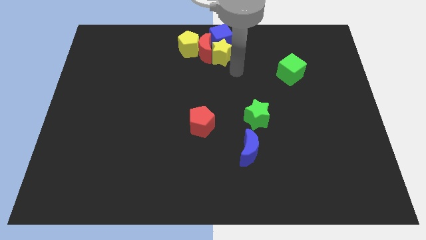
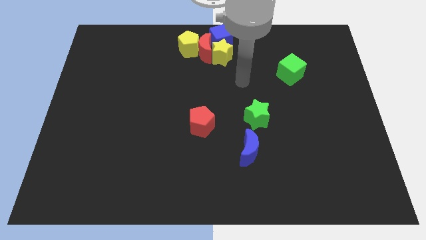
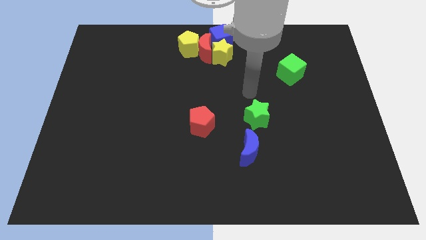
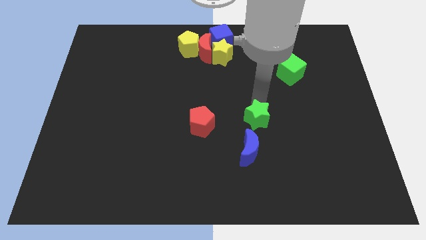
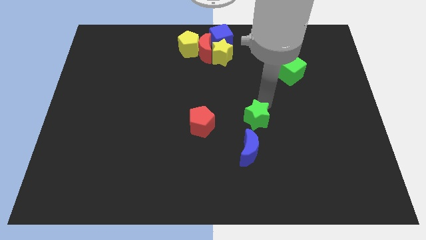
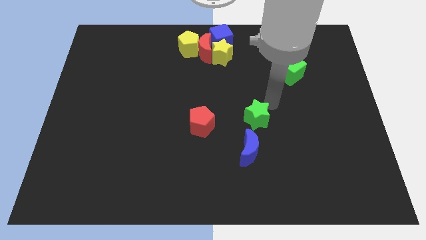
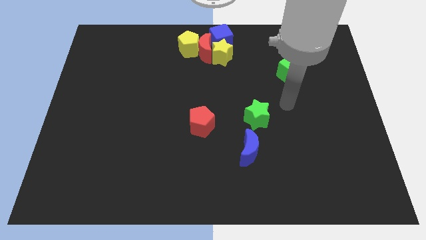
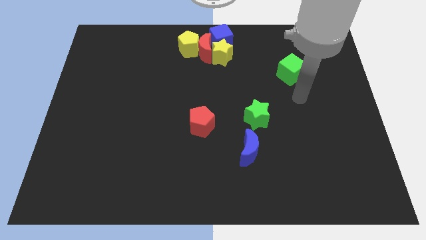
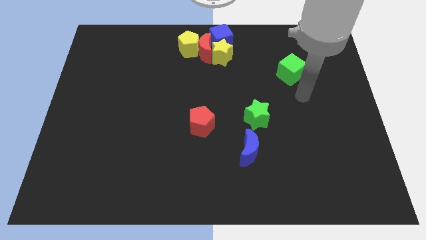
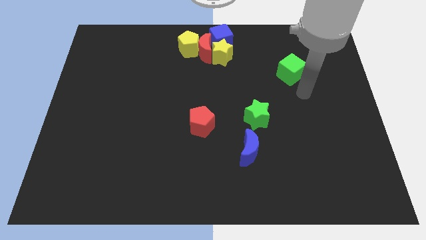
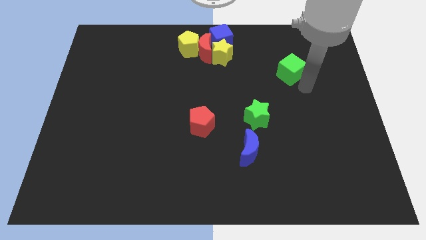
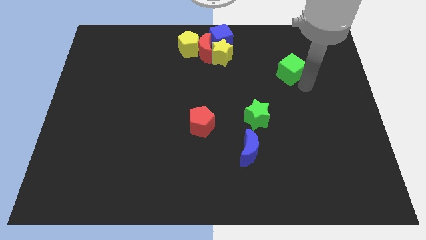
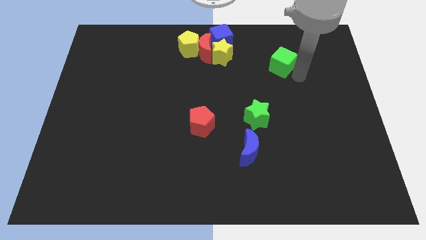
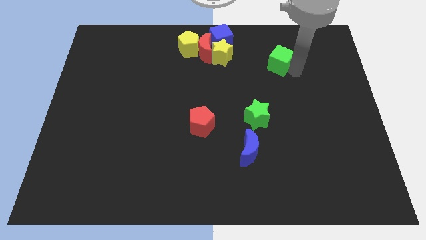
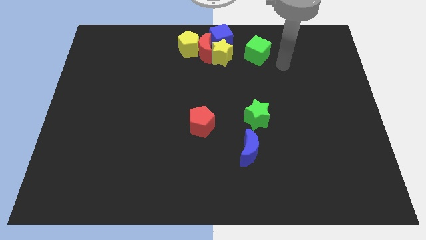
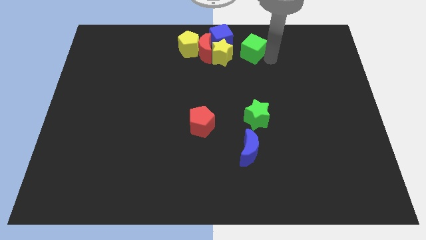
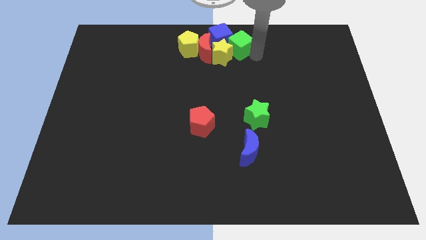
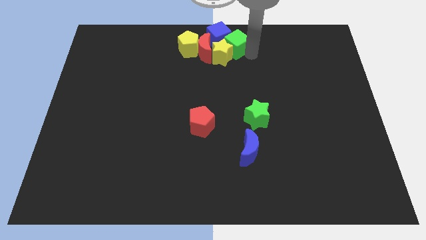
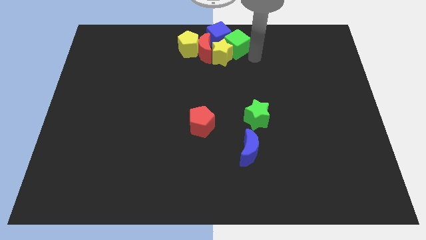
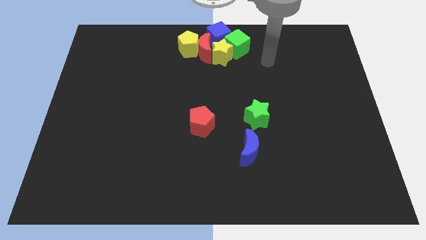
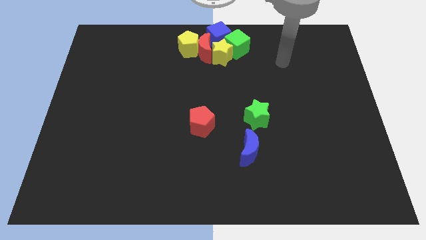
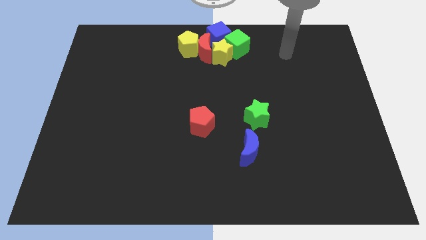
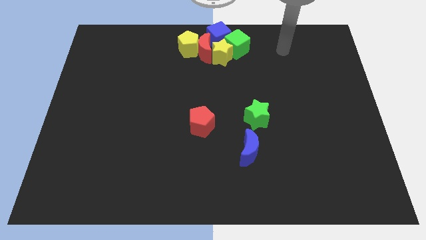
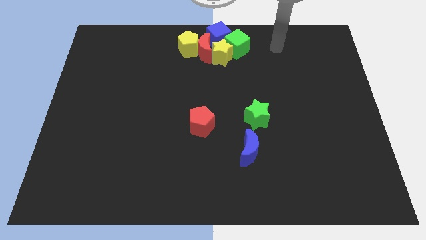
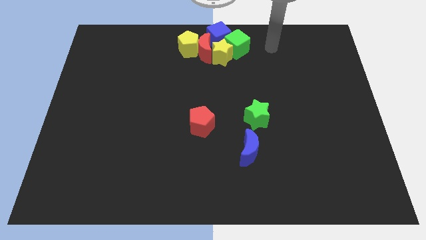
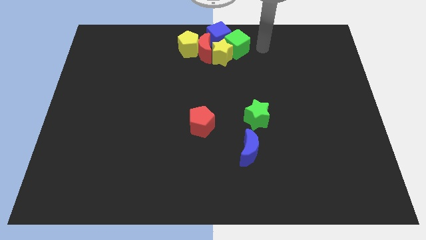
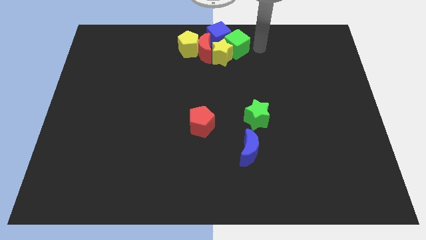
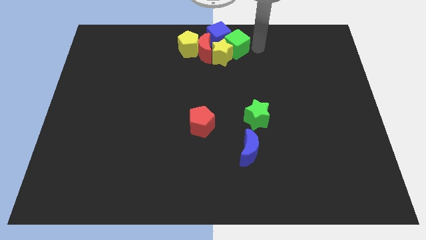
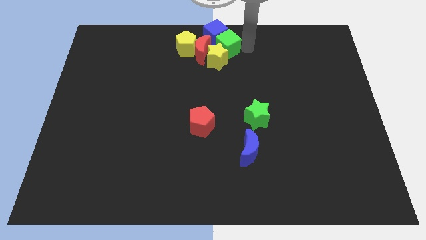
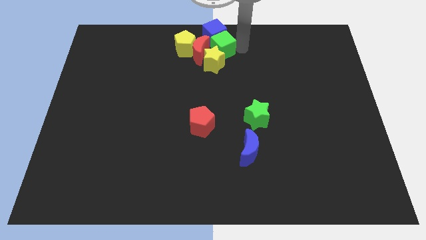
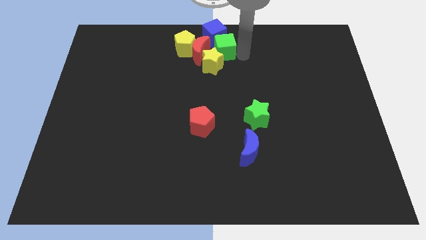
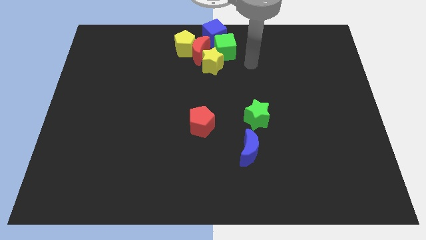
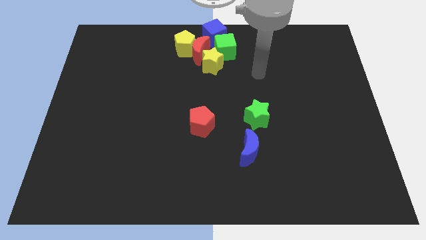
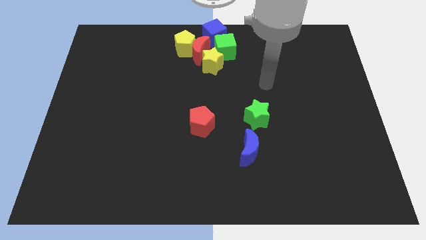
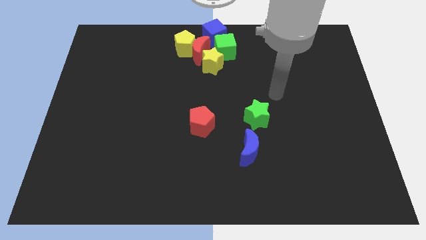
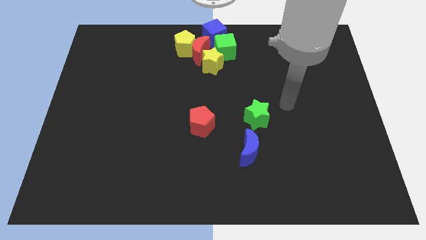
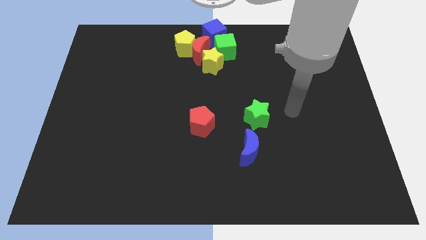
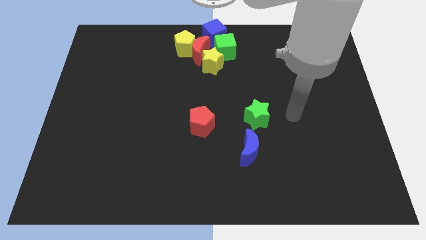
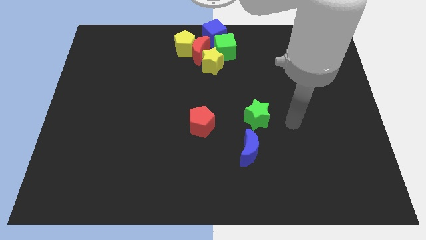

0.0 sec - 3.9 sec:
push the green cube into the blue cube

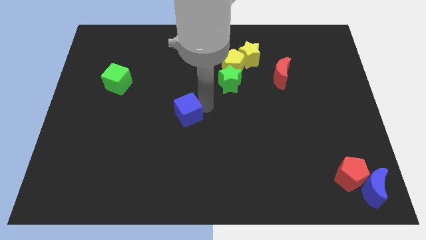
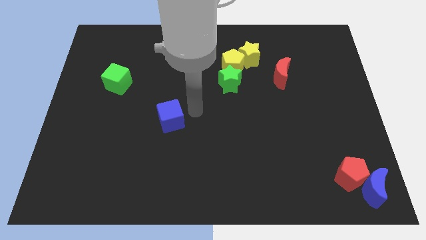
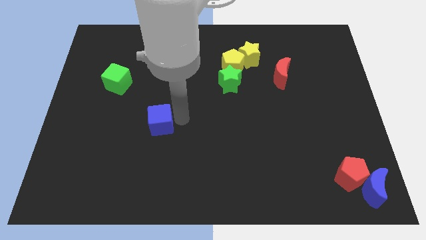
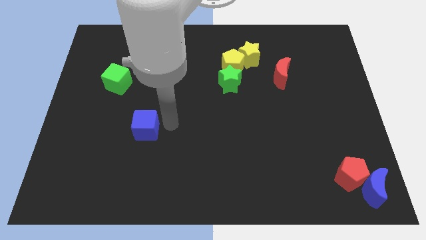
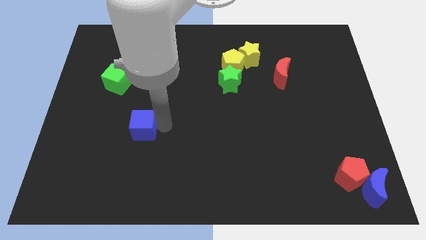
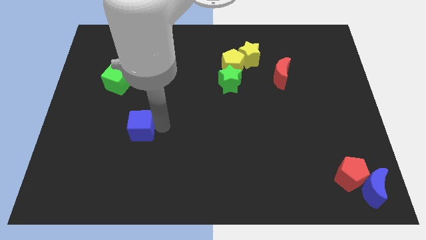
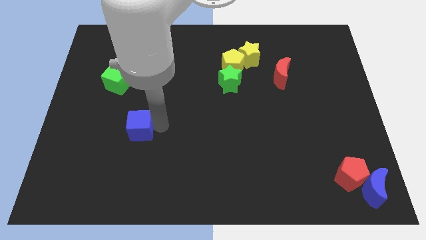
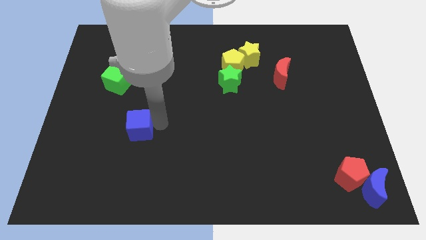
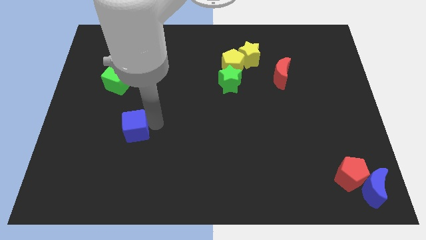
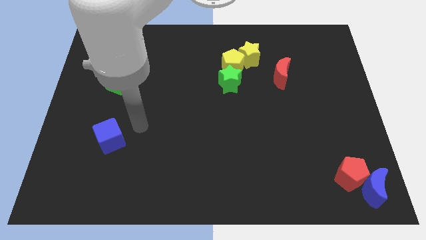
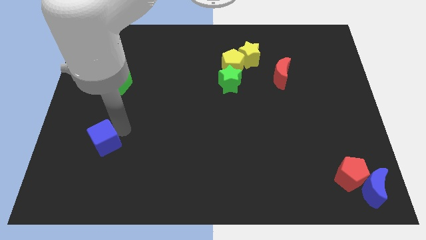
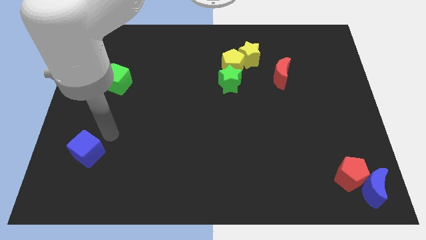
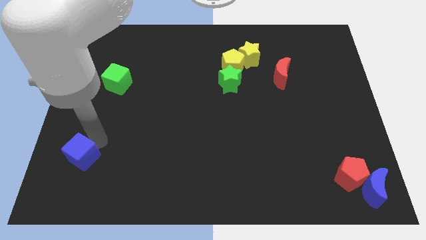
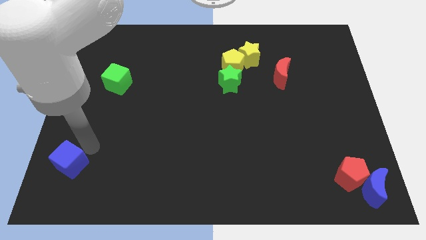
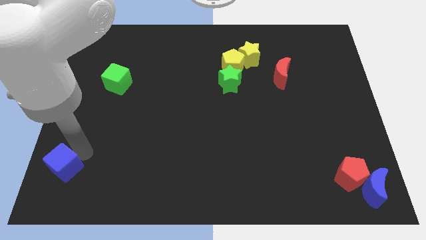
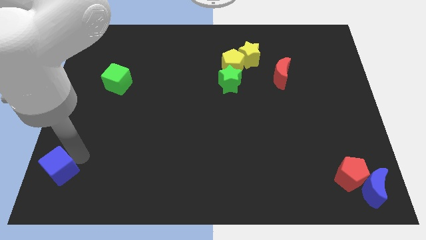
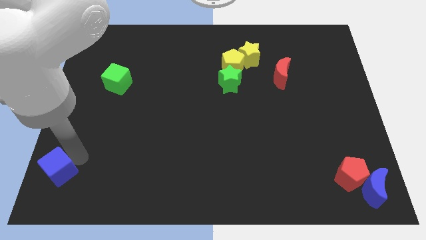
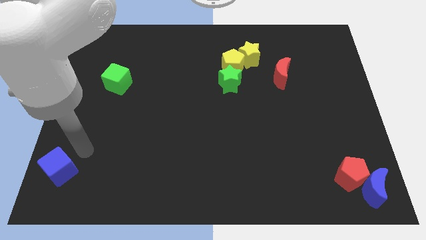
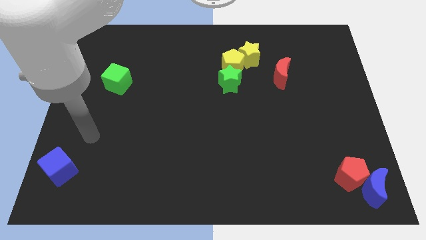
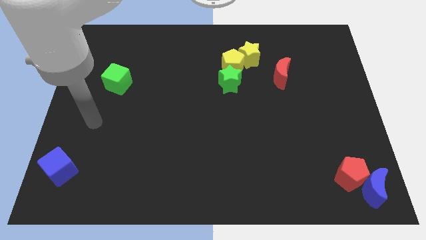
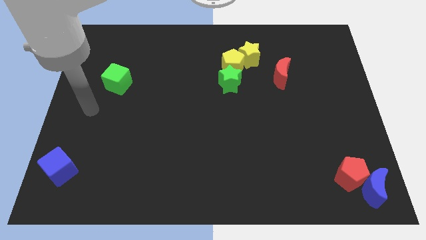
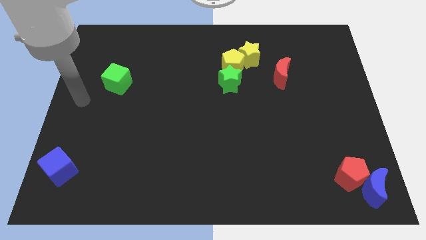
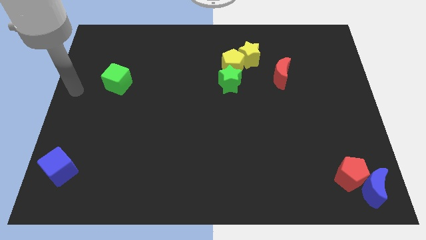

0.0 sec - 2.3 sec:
place blue cube towards bottom left corner

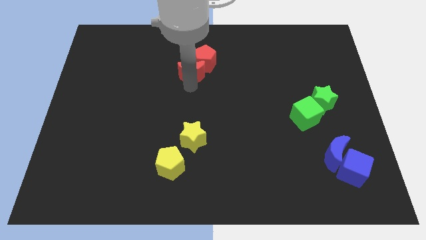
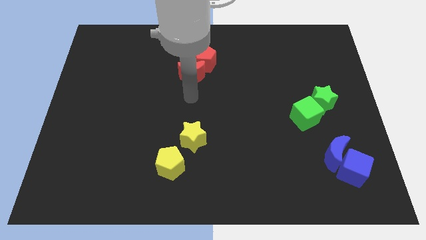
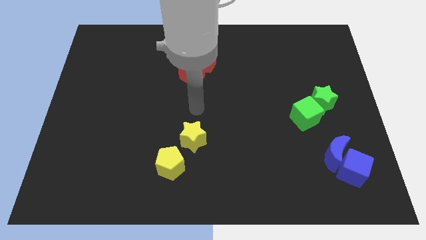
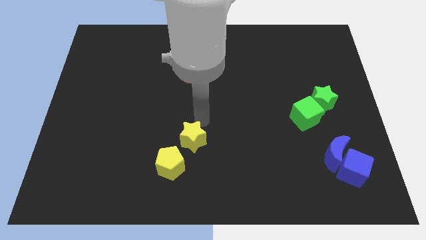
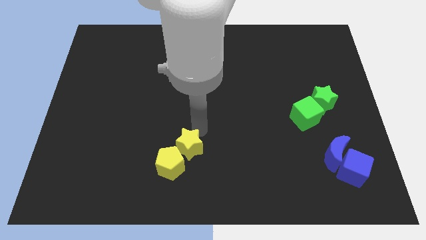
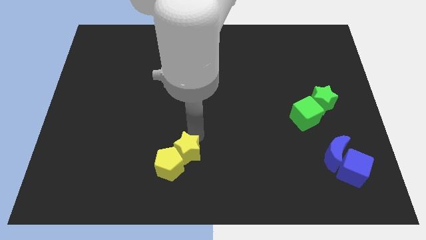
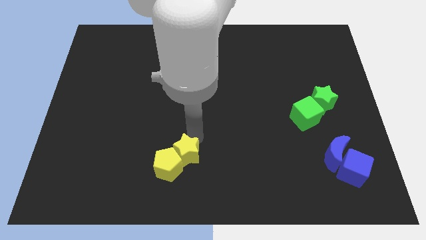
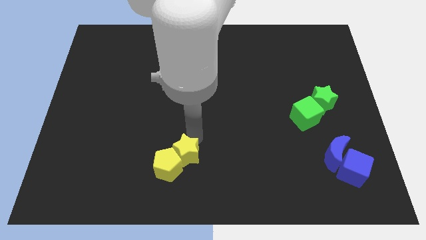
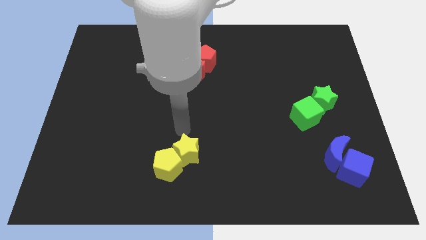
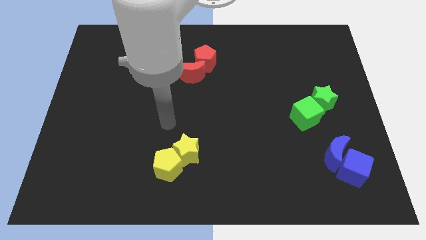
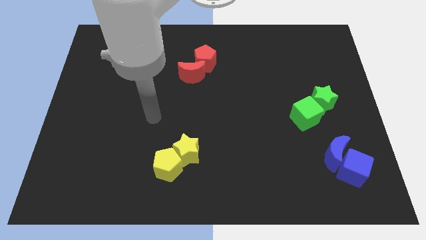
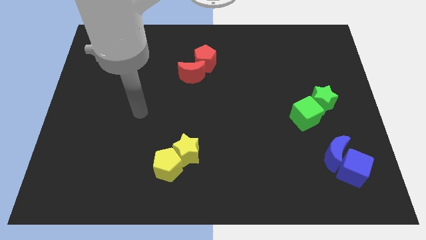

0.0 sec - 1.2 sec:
move the yellow star into the yellow pentagon

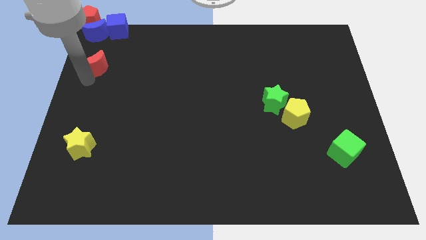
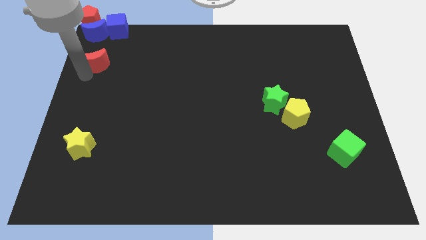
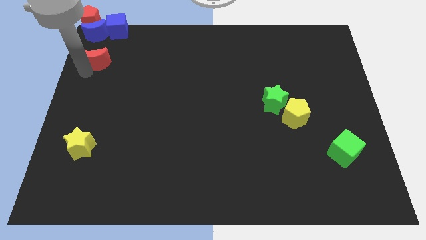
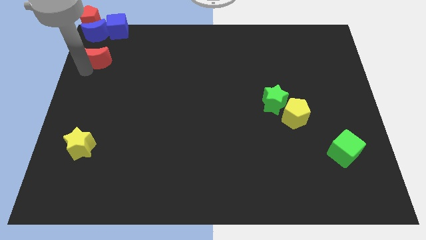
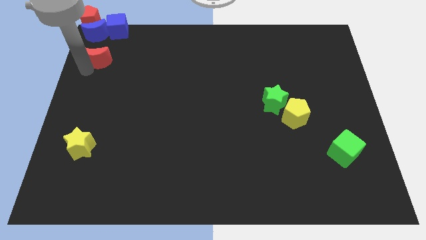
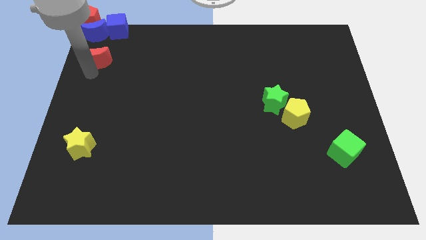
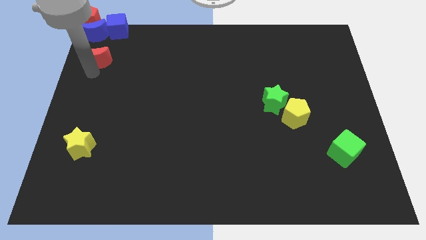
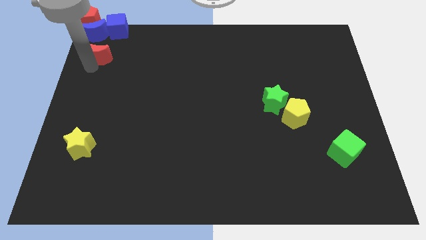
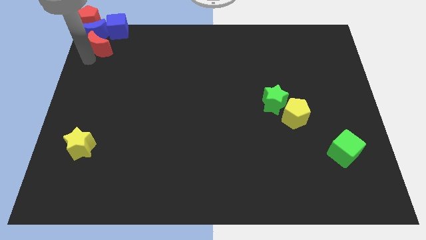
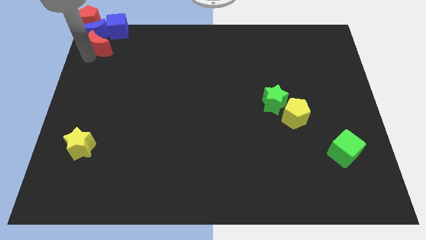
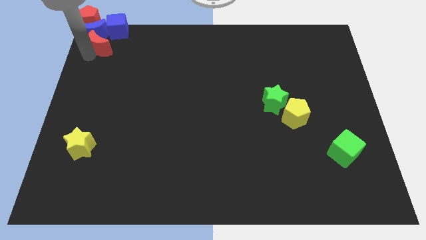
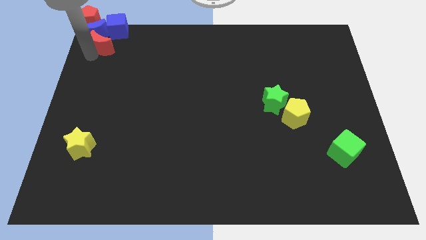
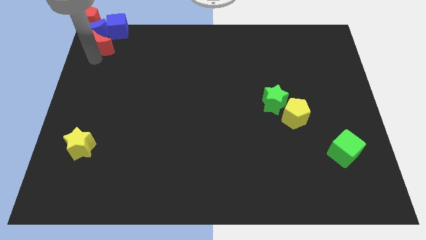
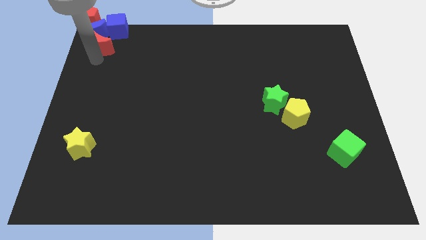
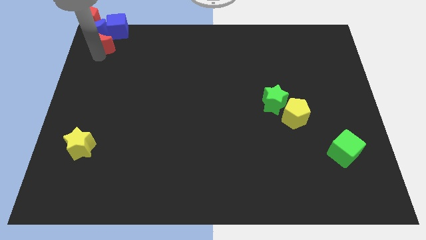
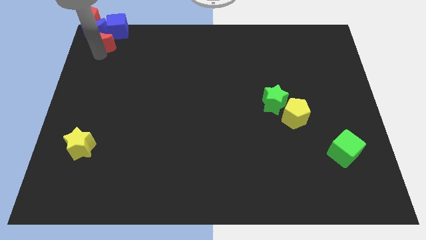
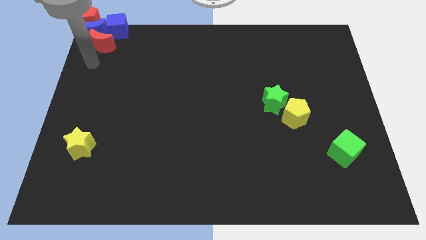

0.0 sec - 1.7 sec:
add the red moon to the group of blocks at the top left corner of the board
